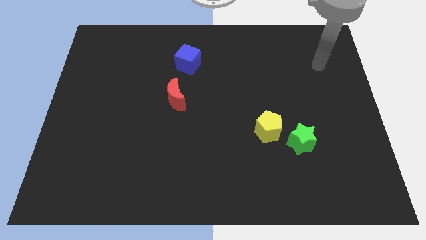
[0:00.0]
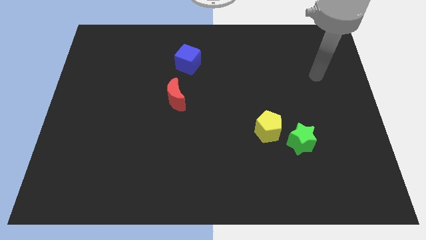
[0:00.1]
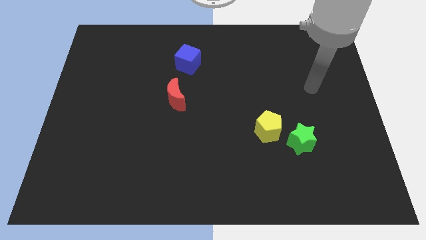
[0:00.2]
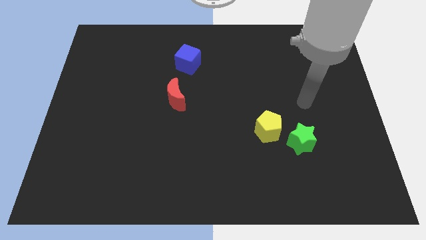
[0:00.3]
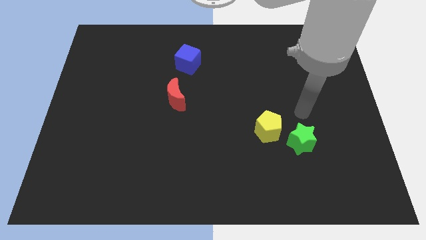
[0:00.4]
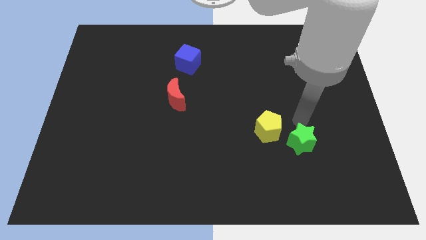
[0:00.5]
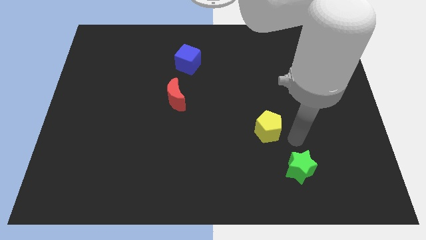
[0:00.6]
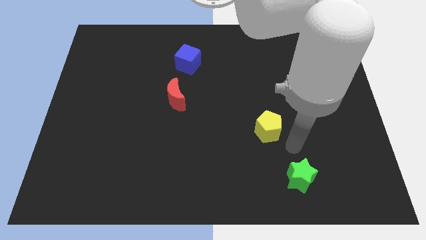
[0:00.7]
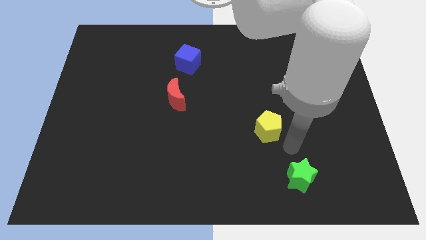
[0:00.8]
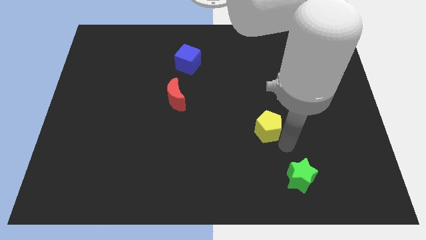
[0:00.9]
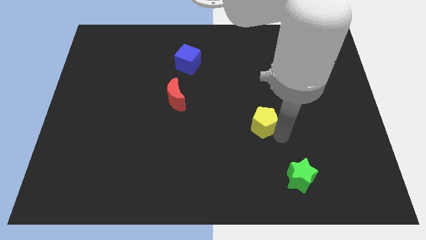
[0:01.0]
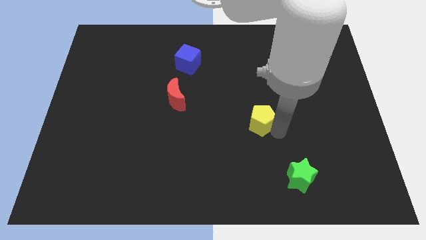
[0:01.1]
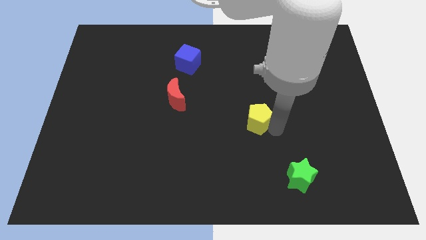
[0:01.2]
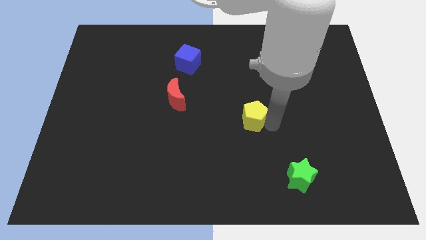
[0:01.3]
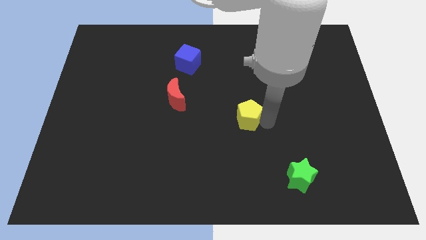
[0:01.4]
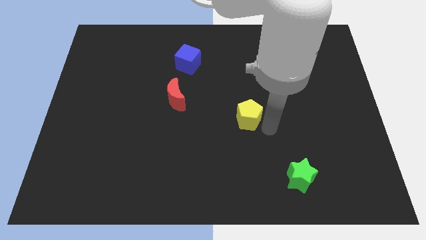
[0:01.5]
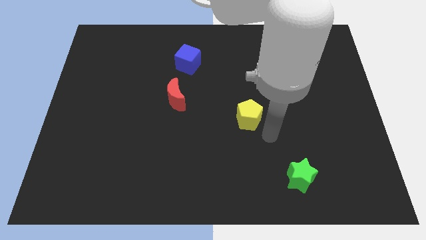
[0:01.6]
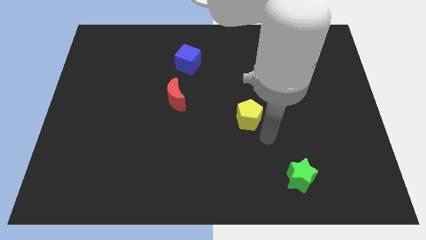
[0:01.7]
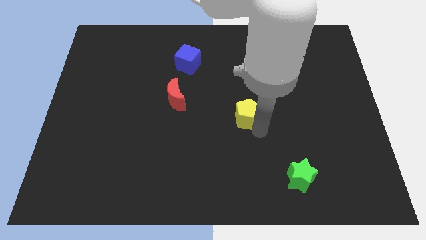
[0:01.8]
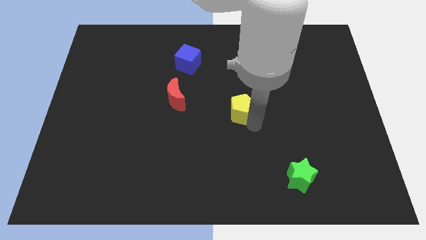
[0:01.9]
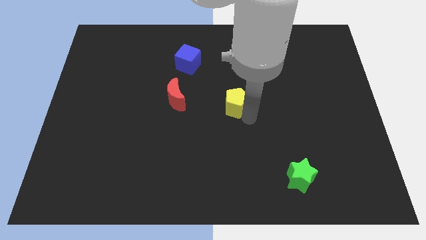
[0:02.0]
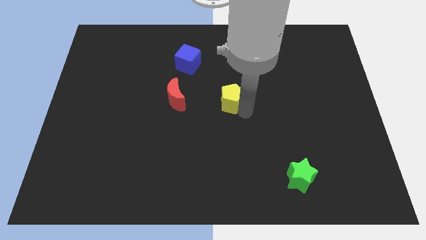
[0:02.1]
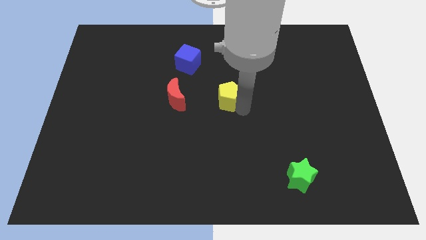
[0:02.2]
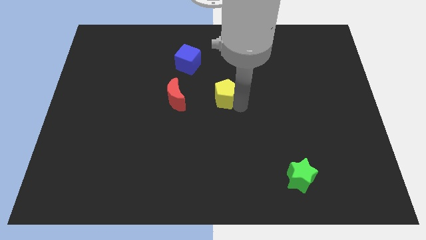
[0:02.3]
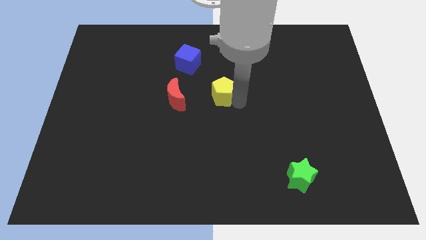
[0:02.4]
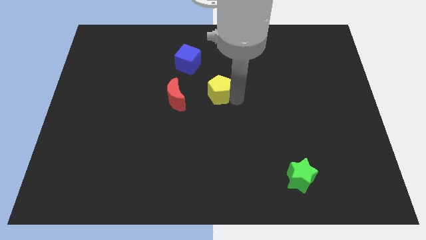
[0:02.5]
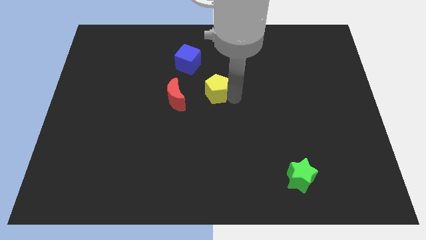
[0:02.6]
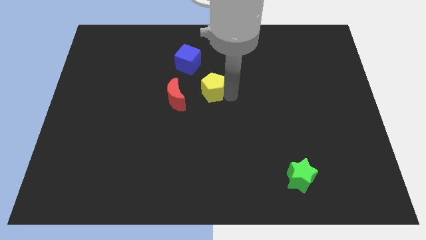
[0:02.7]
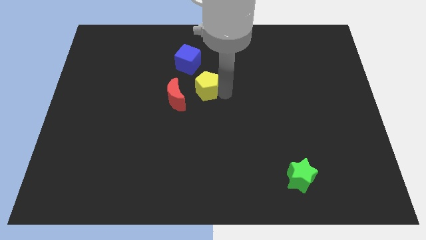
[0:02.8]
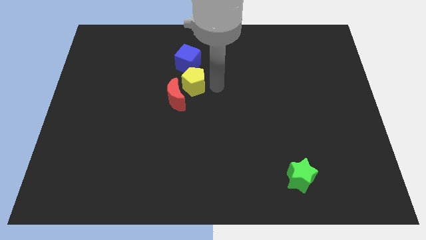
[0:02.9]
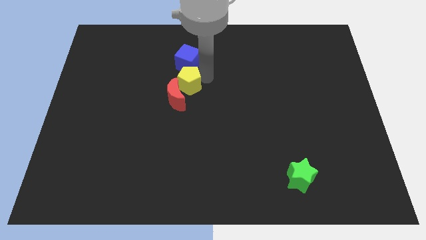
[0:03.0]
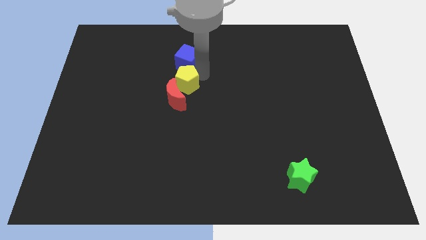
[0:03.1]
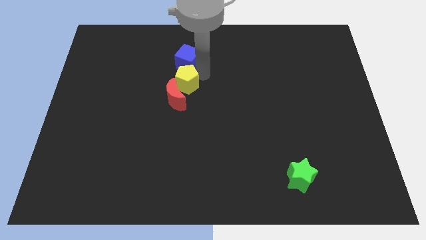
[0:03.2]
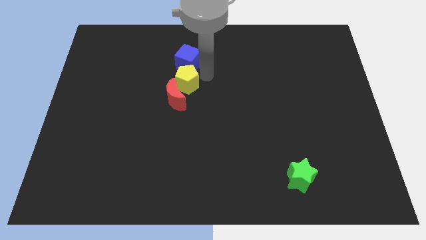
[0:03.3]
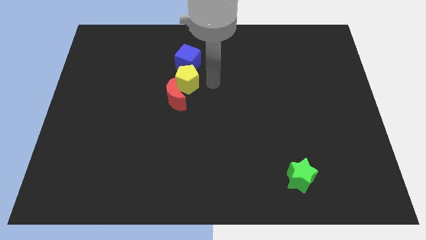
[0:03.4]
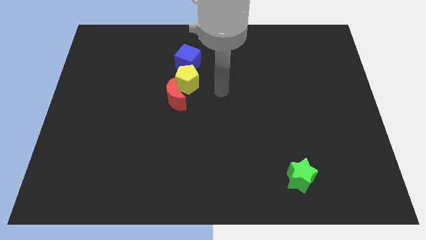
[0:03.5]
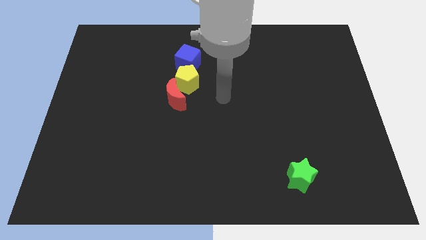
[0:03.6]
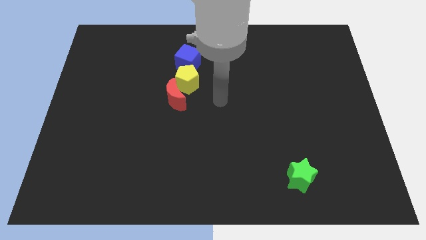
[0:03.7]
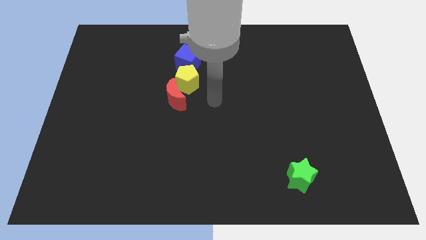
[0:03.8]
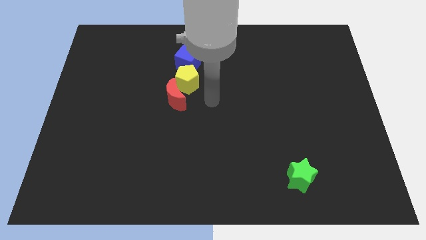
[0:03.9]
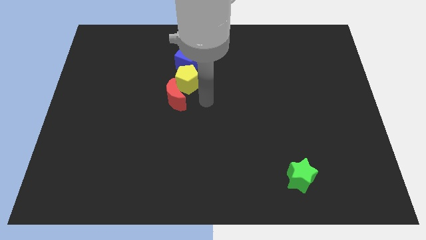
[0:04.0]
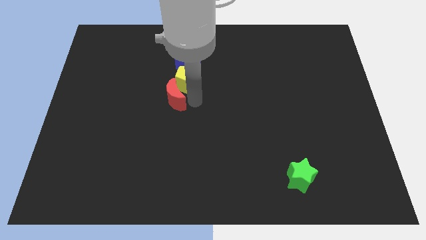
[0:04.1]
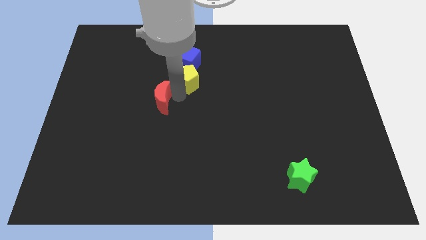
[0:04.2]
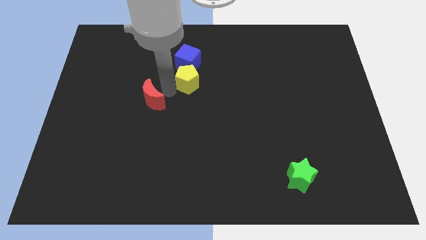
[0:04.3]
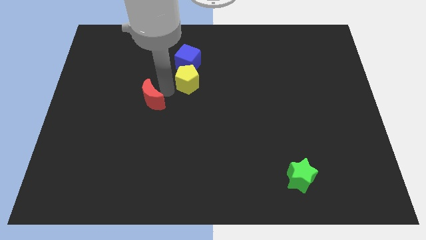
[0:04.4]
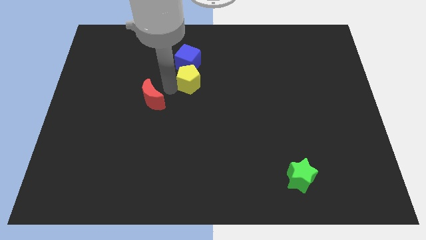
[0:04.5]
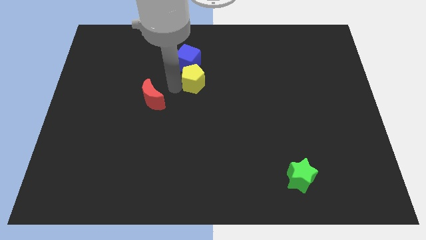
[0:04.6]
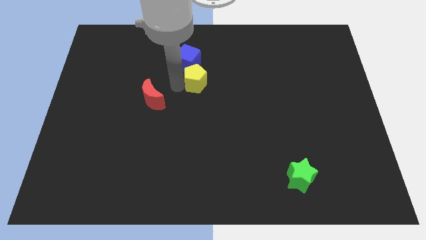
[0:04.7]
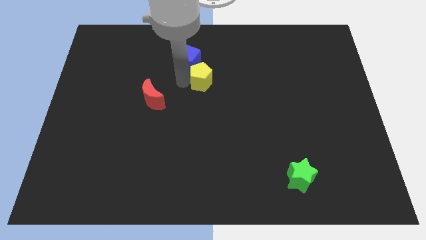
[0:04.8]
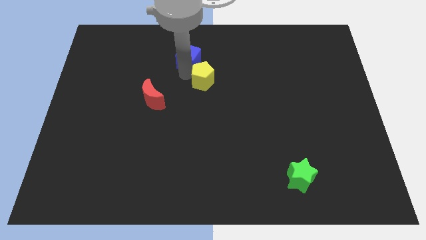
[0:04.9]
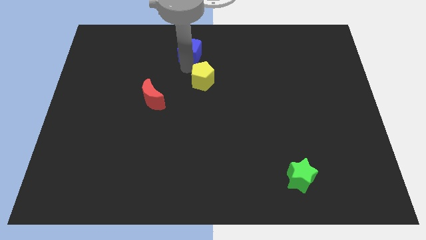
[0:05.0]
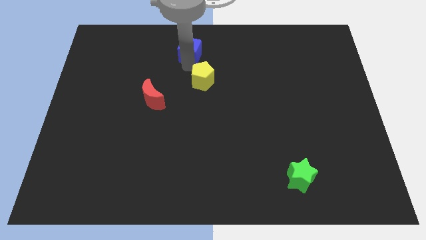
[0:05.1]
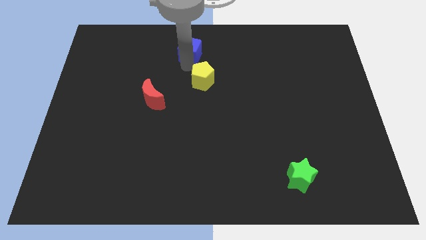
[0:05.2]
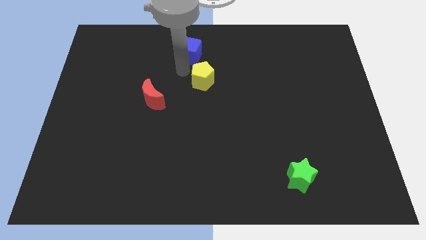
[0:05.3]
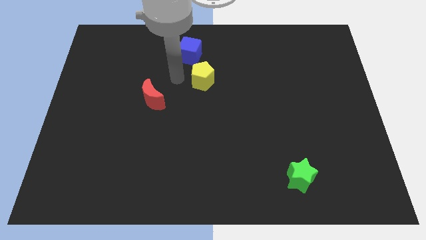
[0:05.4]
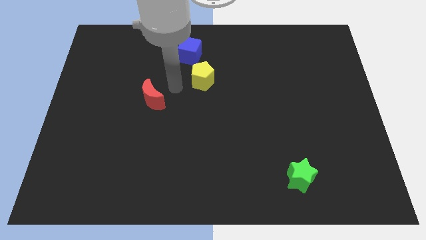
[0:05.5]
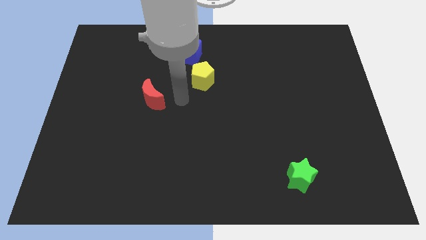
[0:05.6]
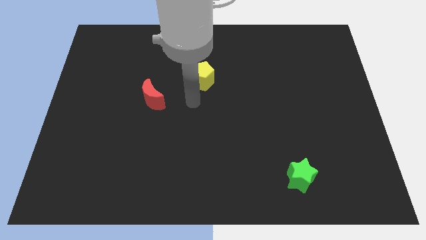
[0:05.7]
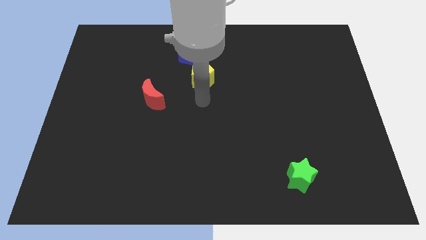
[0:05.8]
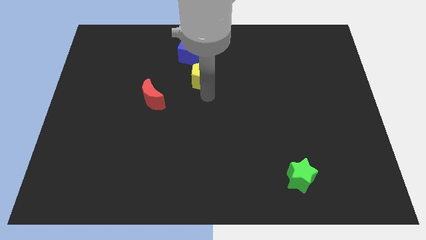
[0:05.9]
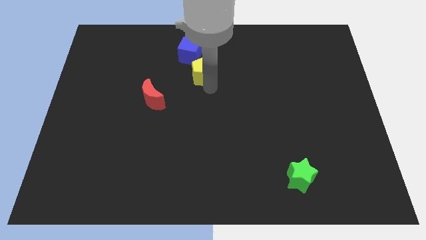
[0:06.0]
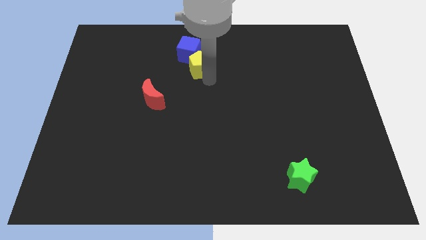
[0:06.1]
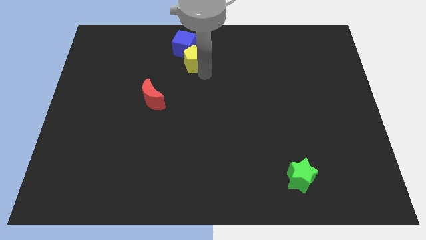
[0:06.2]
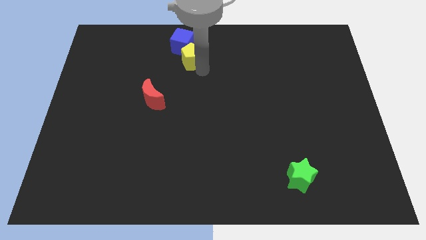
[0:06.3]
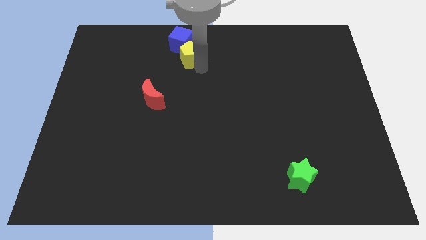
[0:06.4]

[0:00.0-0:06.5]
push the yellow block close to the blue cube

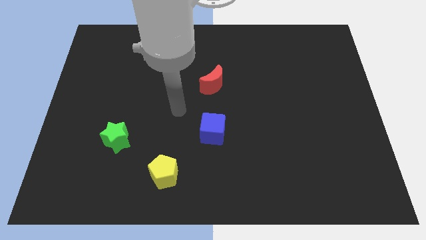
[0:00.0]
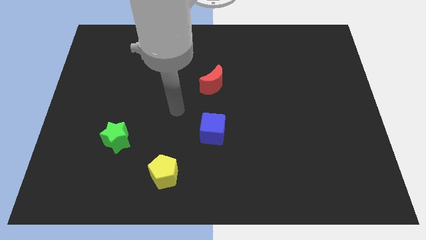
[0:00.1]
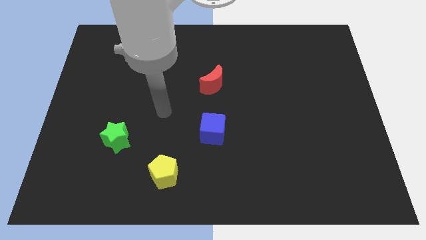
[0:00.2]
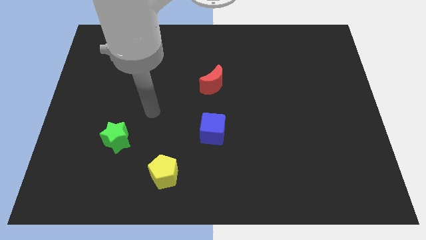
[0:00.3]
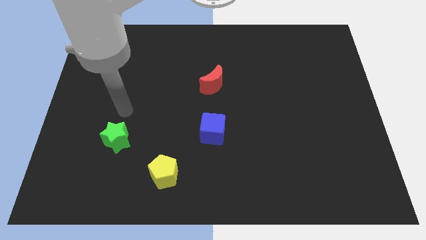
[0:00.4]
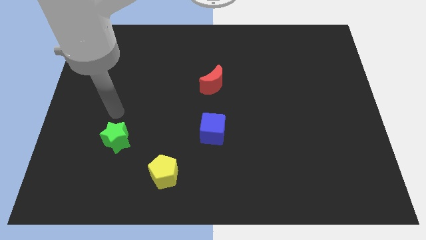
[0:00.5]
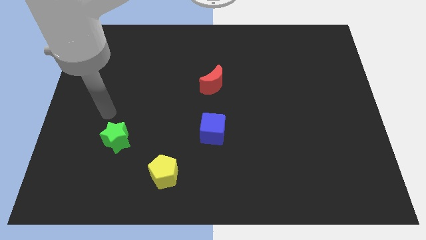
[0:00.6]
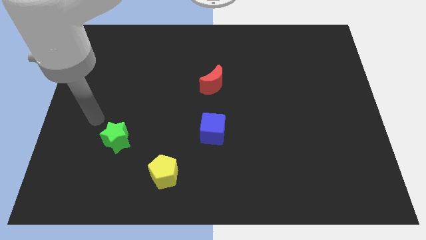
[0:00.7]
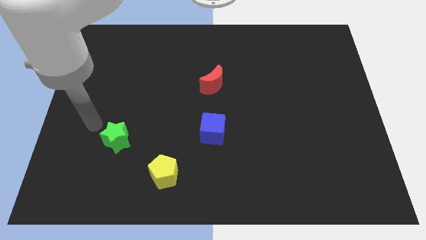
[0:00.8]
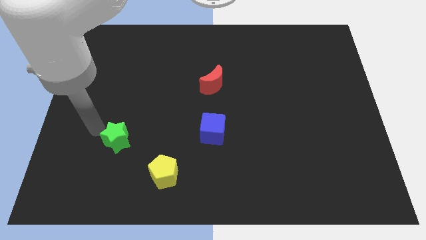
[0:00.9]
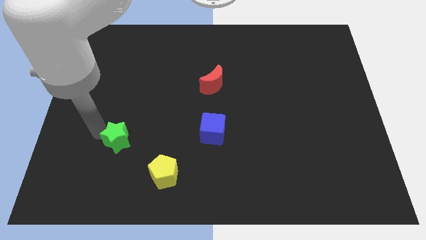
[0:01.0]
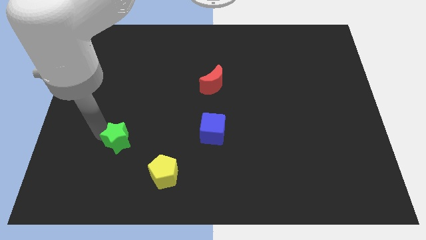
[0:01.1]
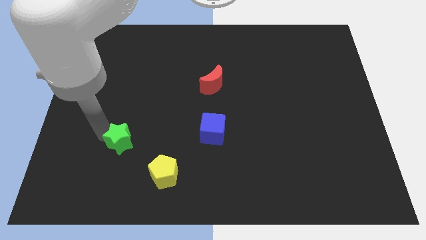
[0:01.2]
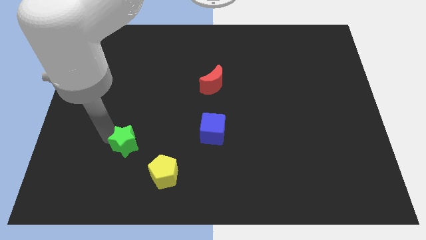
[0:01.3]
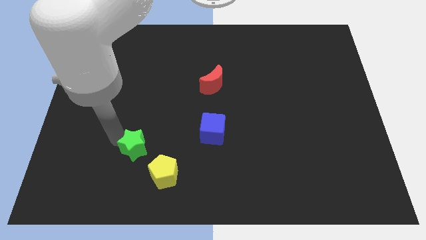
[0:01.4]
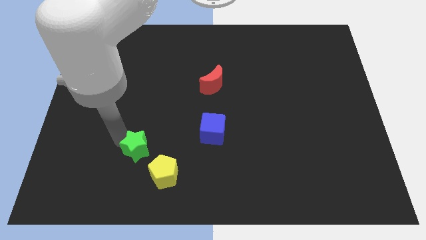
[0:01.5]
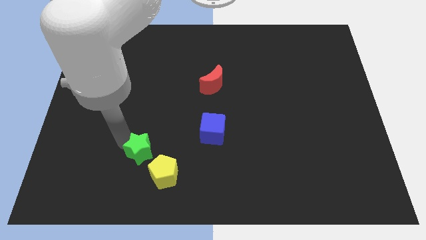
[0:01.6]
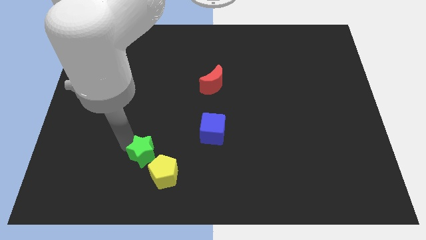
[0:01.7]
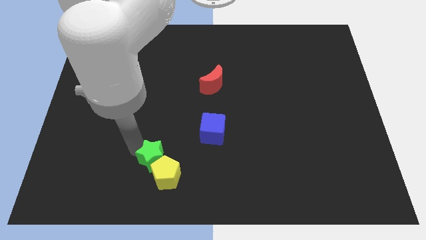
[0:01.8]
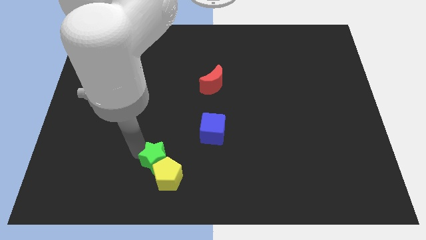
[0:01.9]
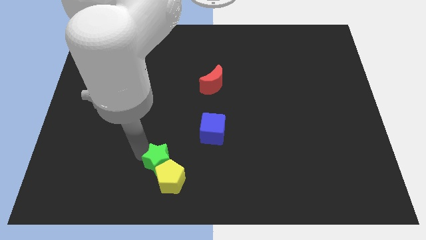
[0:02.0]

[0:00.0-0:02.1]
move the star to the pentagon
